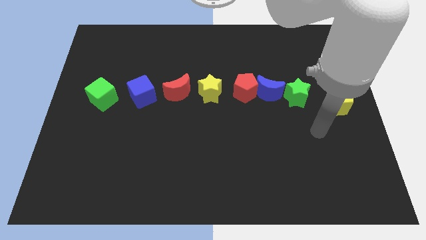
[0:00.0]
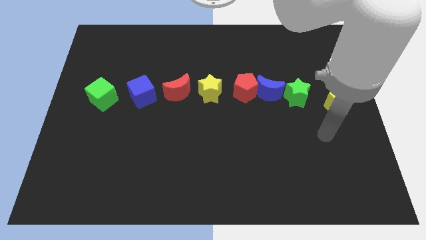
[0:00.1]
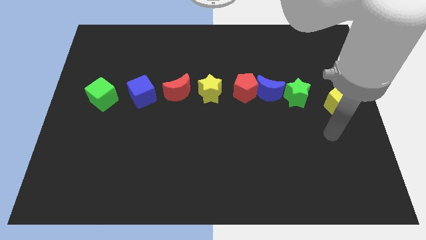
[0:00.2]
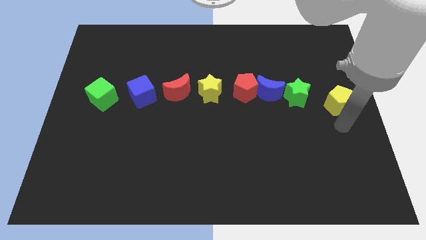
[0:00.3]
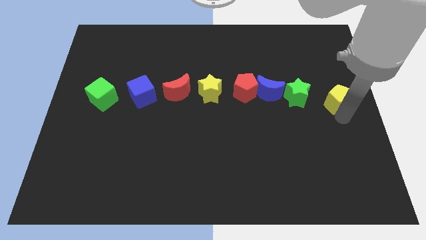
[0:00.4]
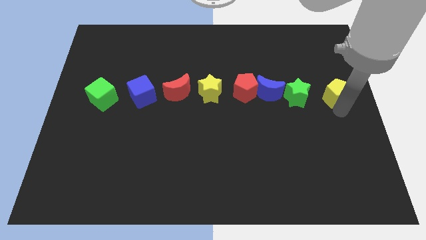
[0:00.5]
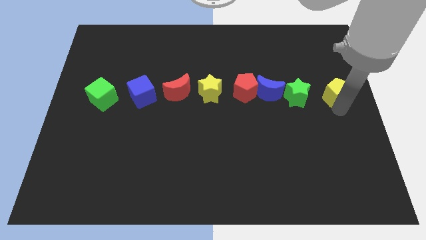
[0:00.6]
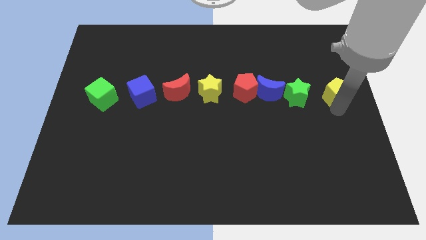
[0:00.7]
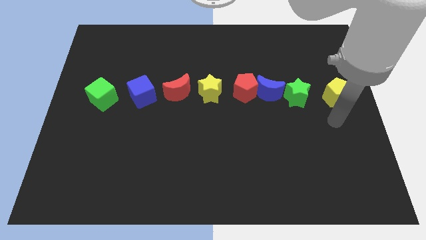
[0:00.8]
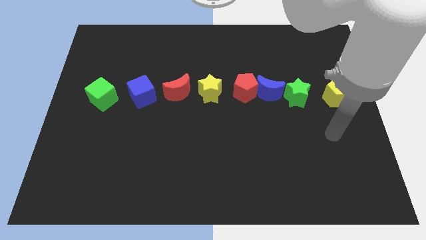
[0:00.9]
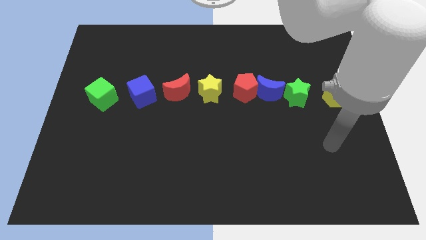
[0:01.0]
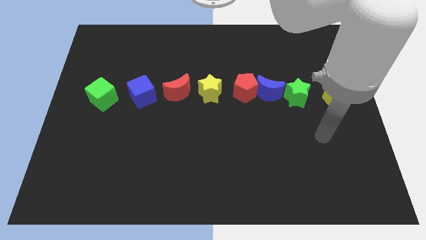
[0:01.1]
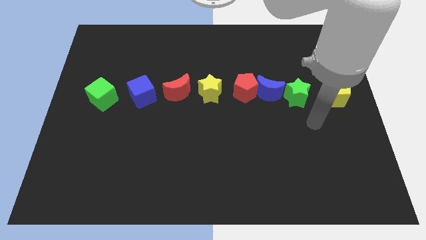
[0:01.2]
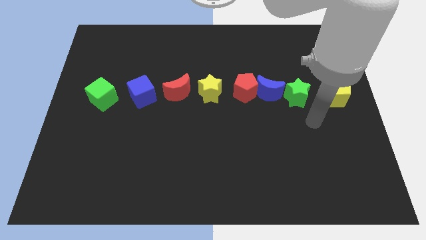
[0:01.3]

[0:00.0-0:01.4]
move the yellow pentagon right to the green star

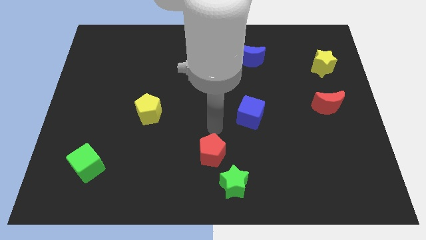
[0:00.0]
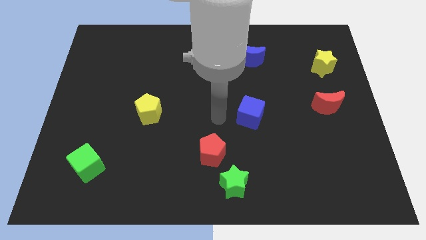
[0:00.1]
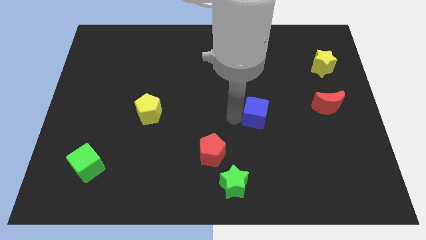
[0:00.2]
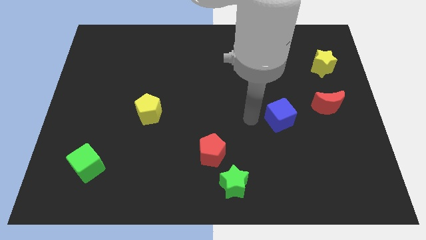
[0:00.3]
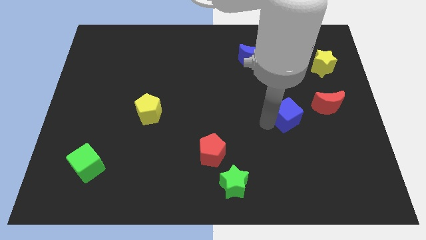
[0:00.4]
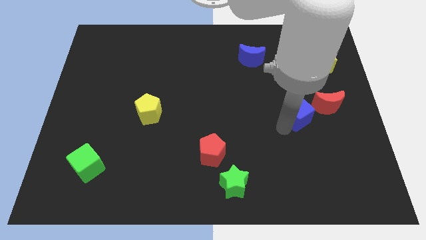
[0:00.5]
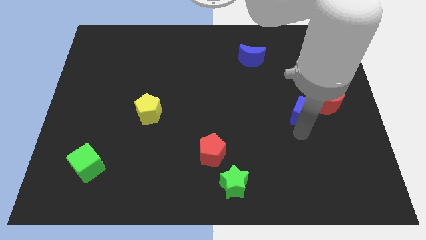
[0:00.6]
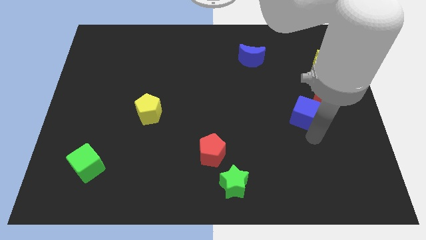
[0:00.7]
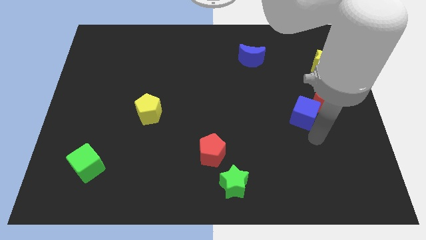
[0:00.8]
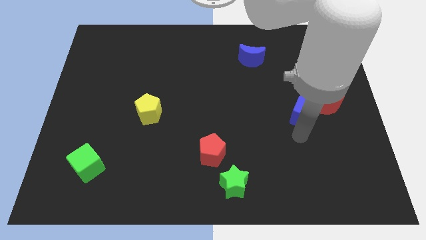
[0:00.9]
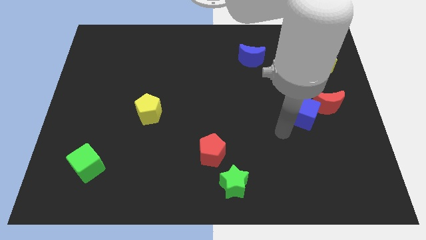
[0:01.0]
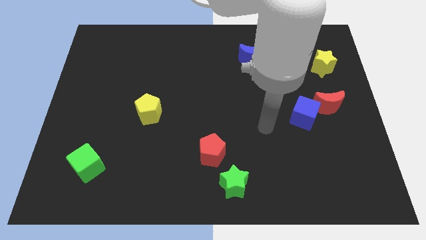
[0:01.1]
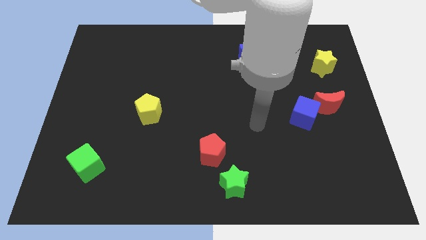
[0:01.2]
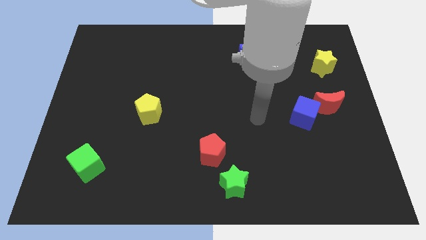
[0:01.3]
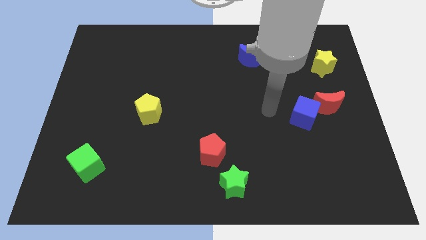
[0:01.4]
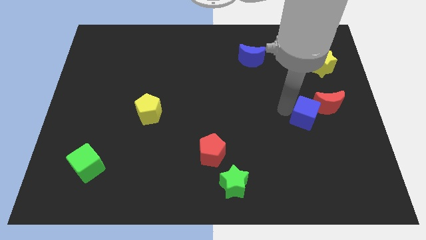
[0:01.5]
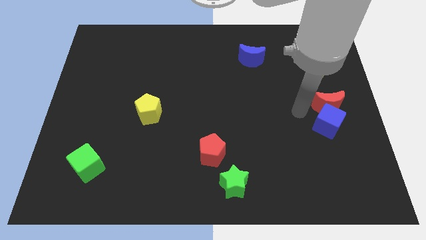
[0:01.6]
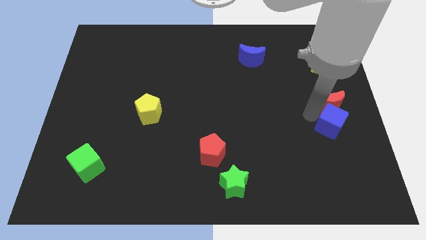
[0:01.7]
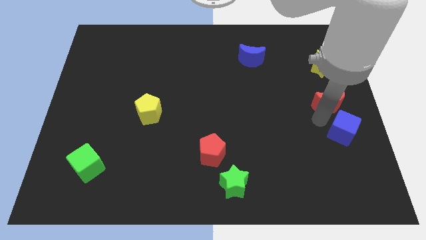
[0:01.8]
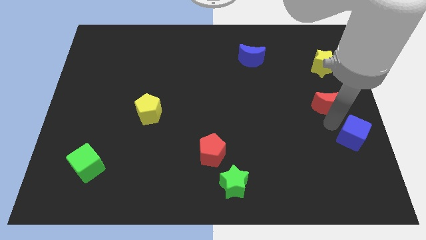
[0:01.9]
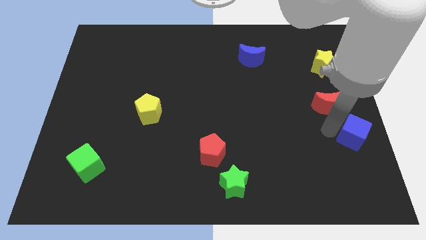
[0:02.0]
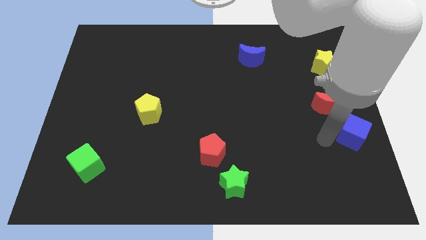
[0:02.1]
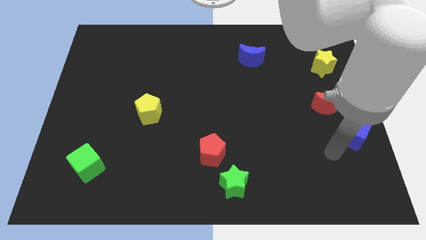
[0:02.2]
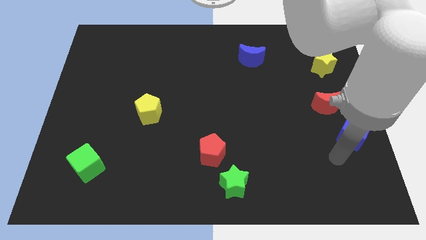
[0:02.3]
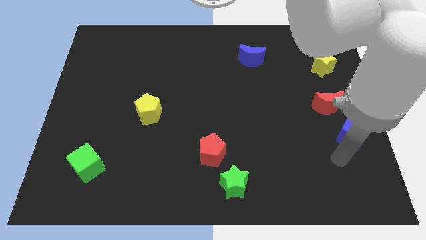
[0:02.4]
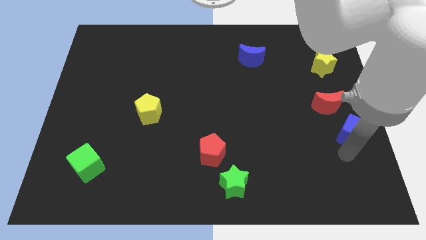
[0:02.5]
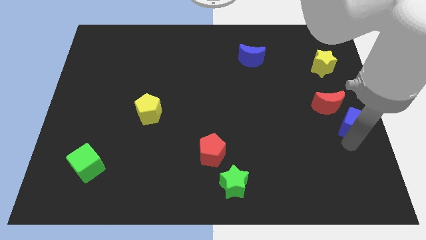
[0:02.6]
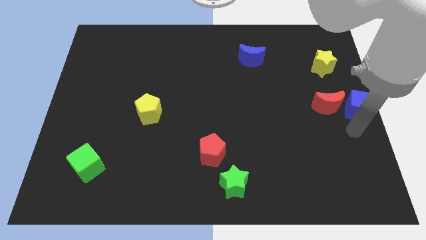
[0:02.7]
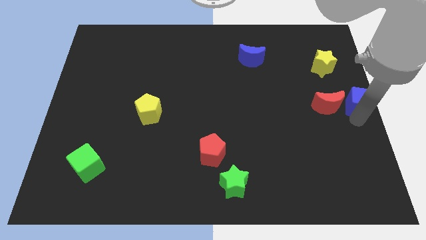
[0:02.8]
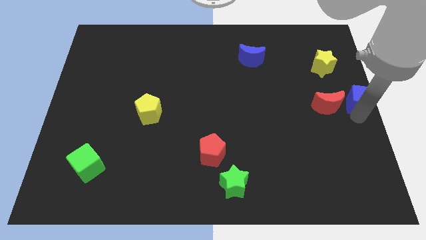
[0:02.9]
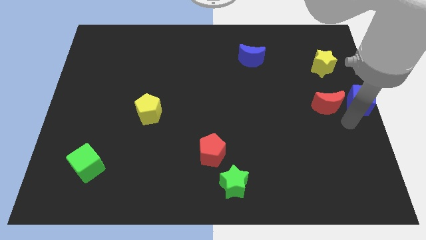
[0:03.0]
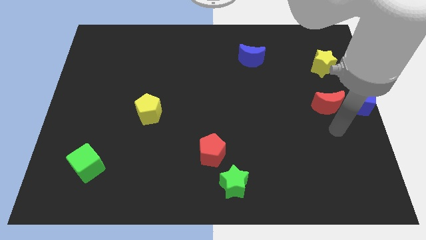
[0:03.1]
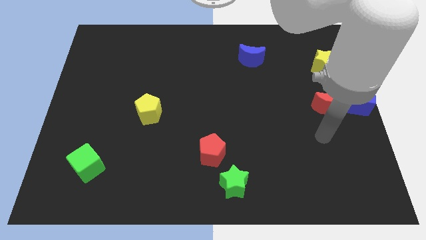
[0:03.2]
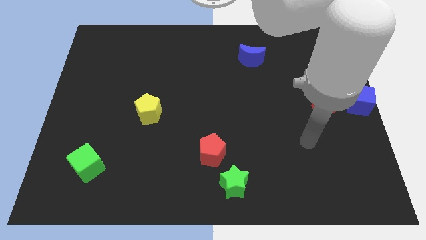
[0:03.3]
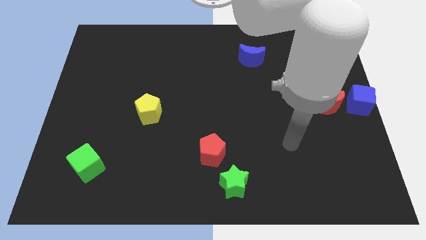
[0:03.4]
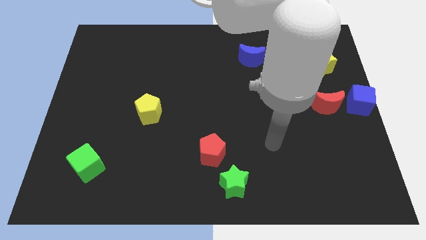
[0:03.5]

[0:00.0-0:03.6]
place the blue cube towards the right side of the red crescent

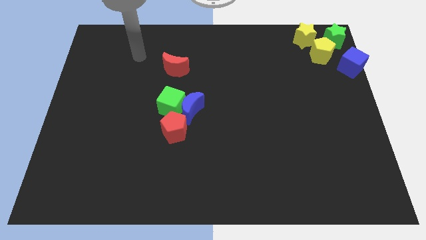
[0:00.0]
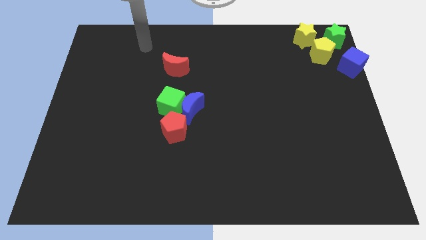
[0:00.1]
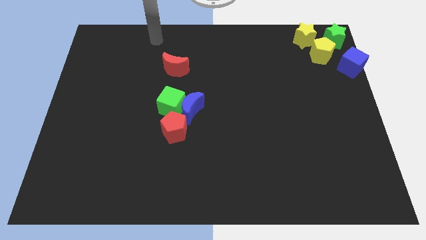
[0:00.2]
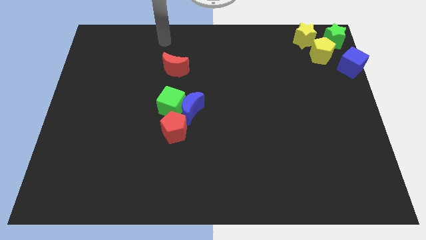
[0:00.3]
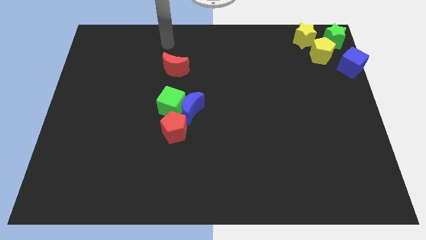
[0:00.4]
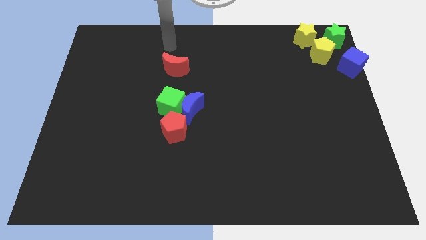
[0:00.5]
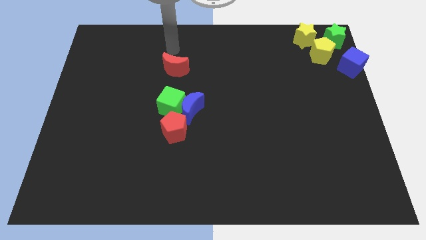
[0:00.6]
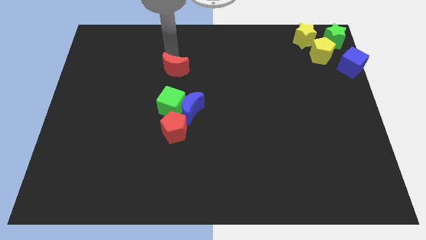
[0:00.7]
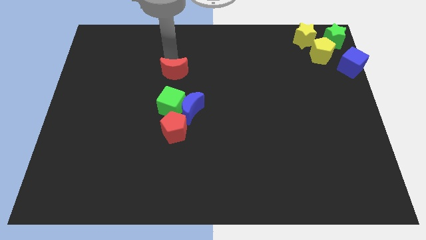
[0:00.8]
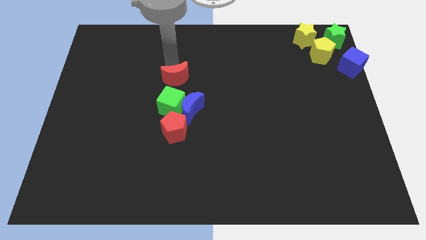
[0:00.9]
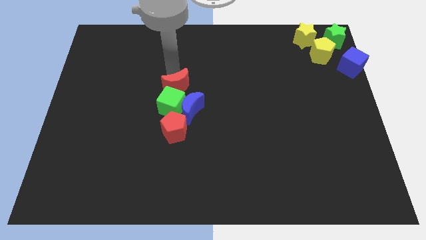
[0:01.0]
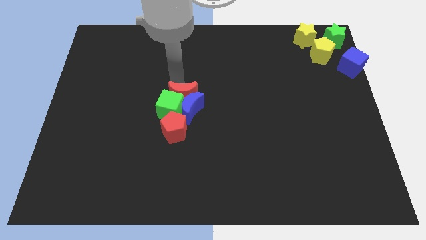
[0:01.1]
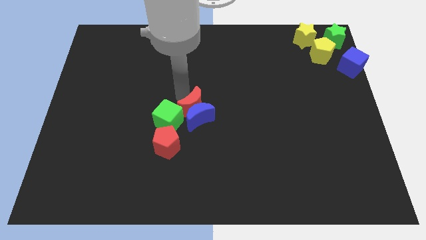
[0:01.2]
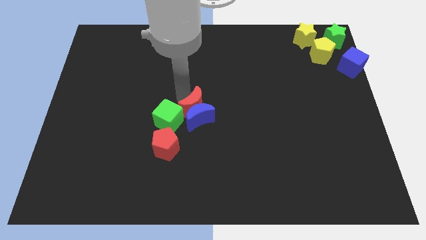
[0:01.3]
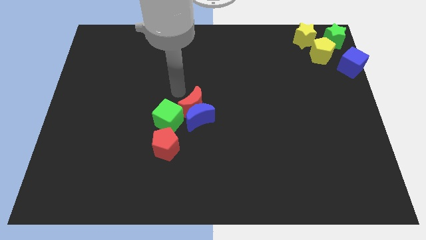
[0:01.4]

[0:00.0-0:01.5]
push the red crescent into blue crescent

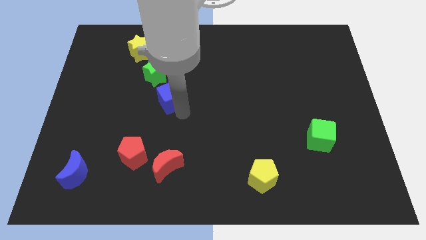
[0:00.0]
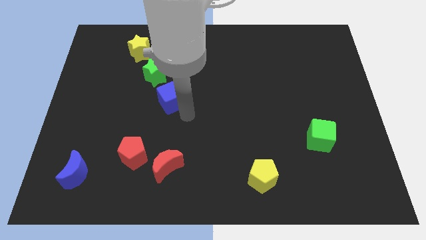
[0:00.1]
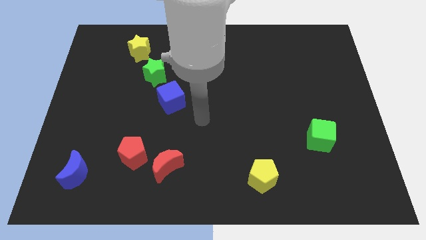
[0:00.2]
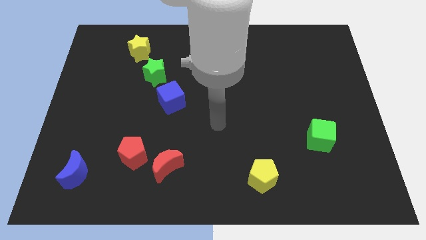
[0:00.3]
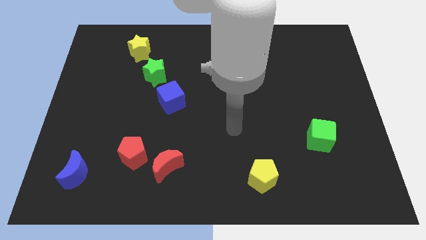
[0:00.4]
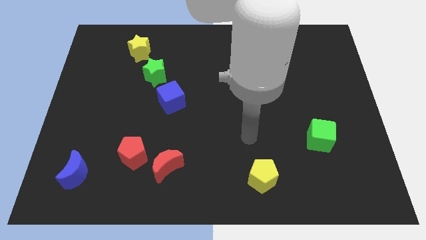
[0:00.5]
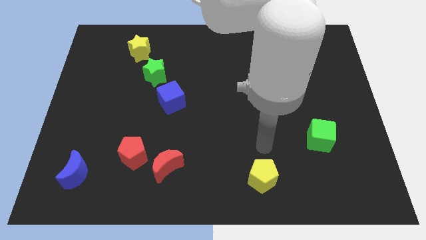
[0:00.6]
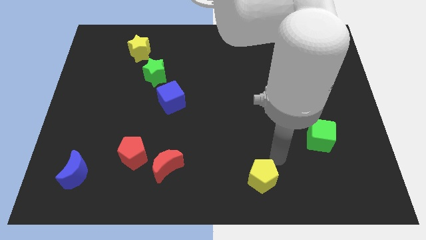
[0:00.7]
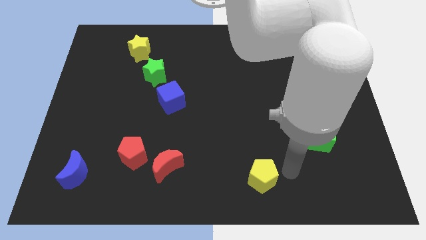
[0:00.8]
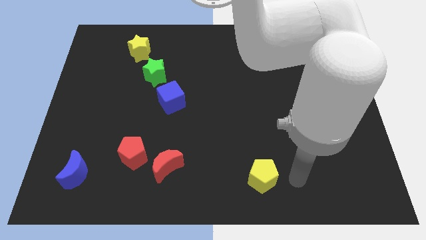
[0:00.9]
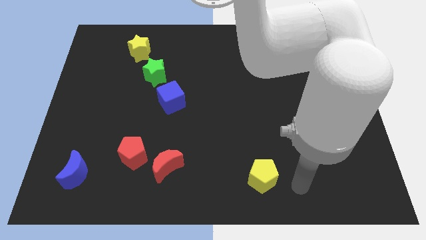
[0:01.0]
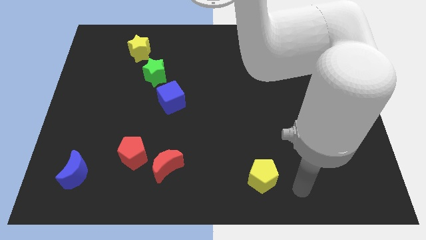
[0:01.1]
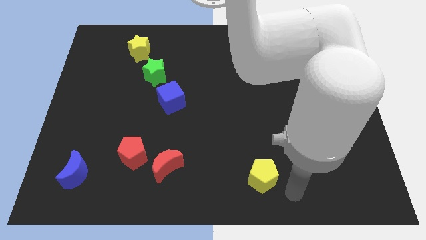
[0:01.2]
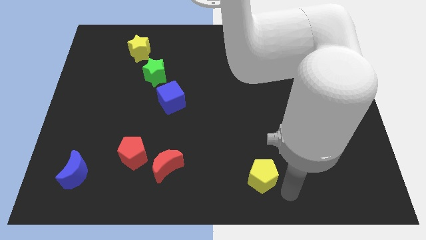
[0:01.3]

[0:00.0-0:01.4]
move your arm away from the blue cube

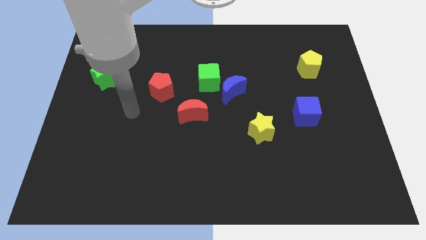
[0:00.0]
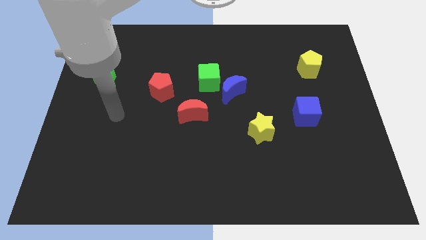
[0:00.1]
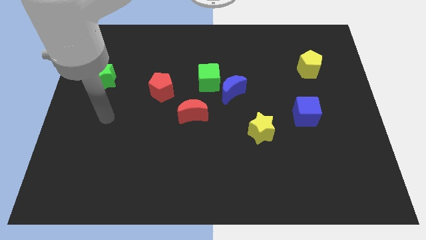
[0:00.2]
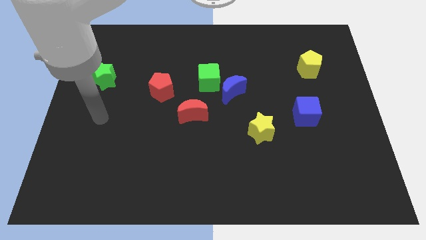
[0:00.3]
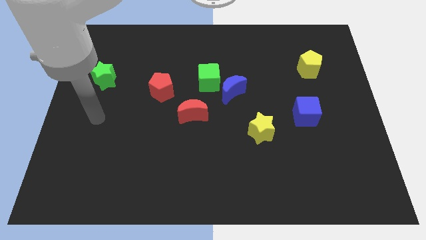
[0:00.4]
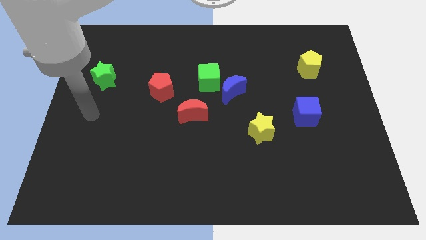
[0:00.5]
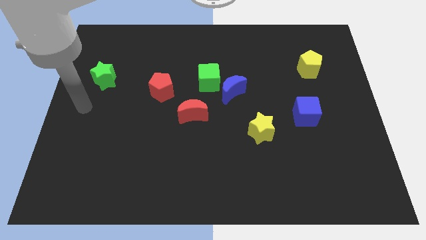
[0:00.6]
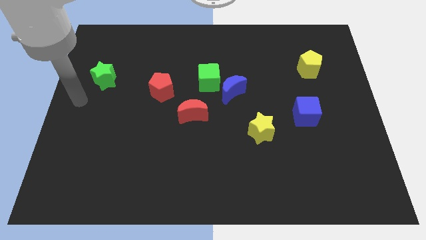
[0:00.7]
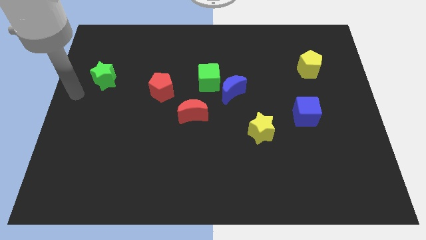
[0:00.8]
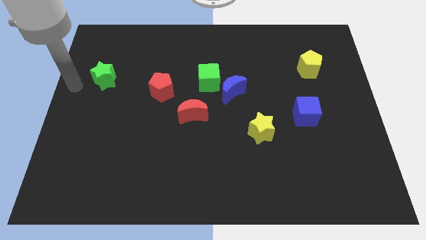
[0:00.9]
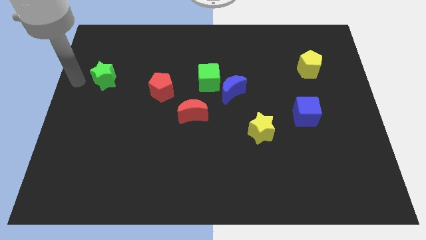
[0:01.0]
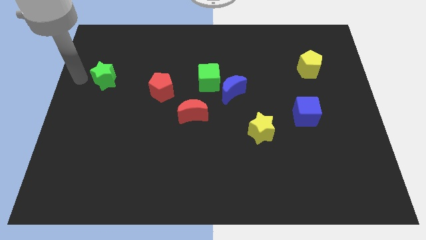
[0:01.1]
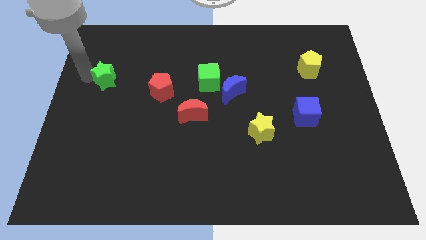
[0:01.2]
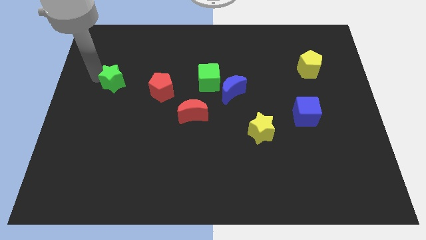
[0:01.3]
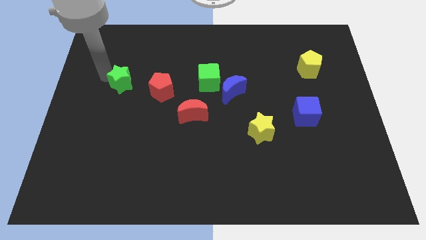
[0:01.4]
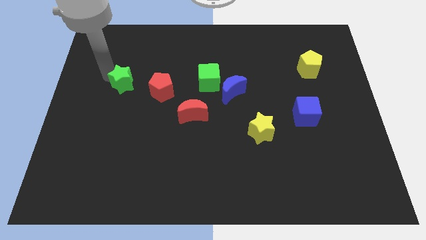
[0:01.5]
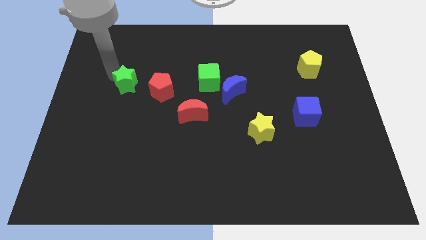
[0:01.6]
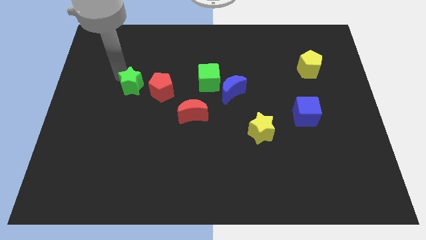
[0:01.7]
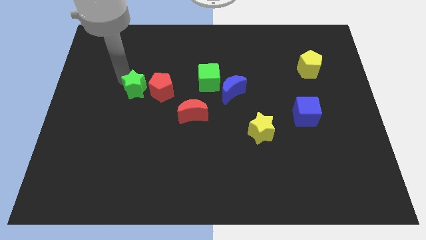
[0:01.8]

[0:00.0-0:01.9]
push the green star left to the red pentagon
